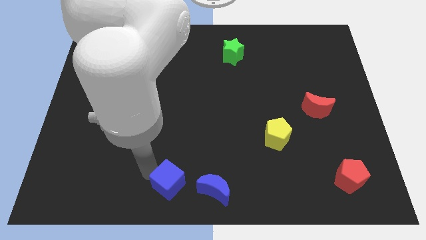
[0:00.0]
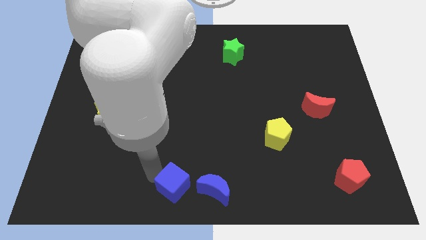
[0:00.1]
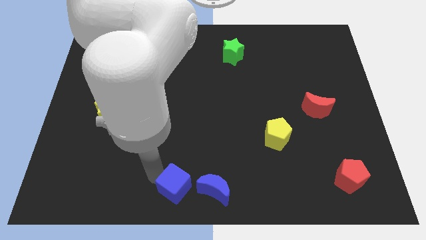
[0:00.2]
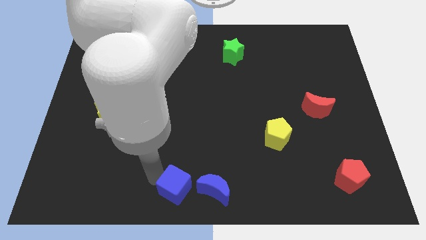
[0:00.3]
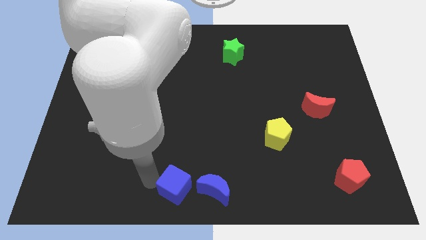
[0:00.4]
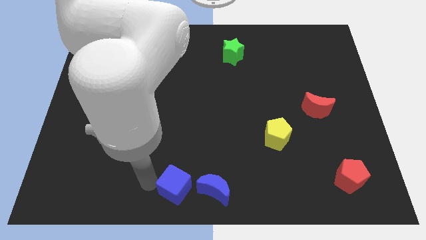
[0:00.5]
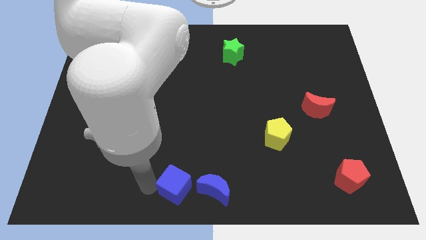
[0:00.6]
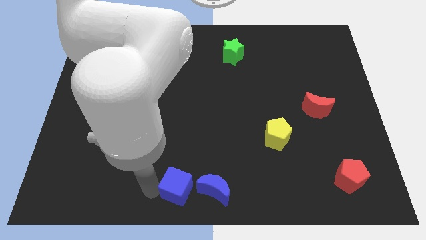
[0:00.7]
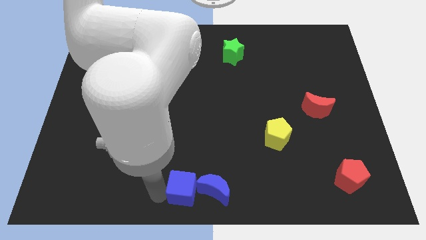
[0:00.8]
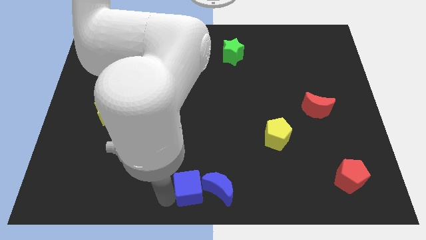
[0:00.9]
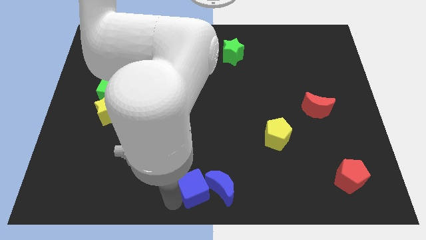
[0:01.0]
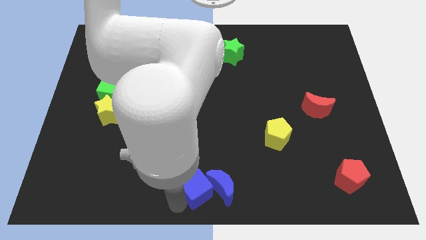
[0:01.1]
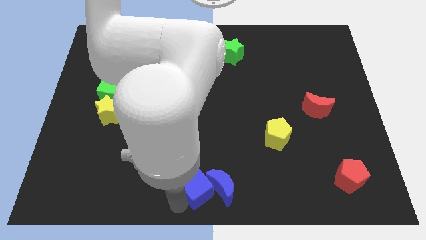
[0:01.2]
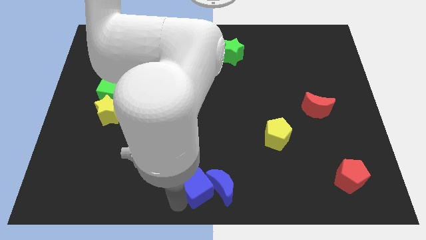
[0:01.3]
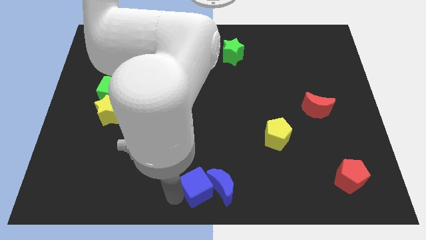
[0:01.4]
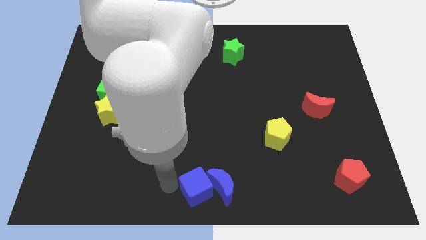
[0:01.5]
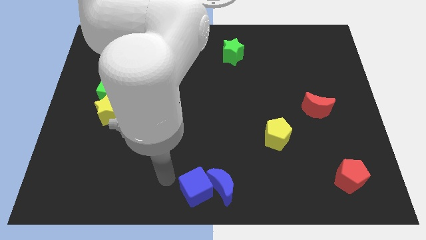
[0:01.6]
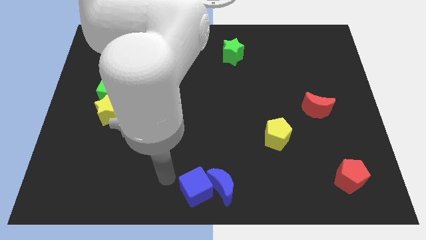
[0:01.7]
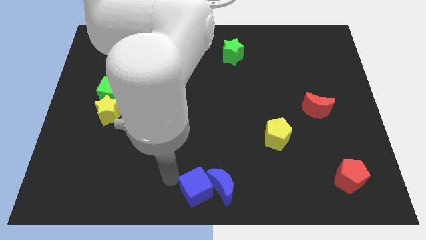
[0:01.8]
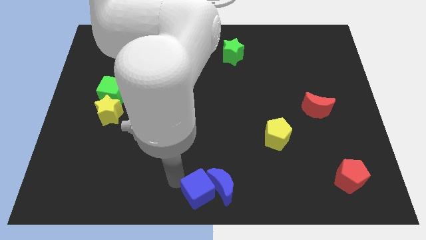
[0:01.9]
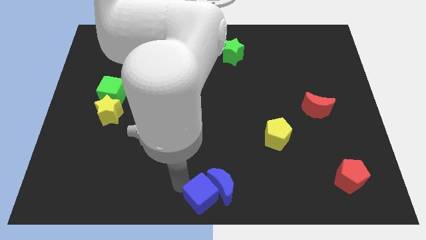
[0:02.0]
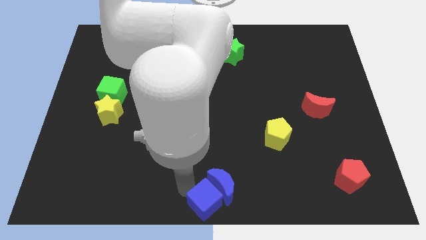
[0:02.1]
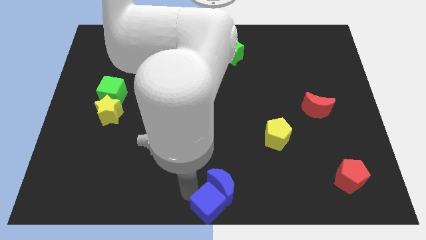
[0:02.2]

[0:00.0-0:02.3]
push the blue cube into the blue moon

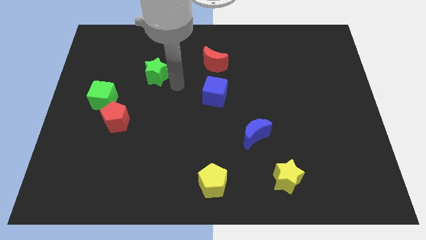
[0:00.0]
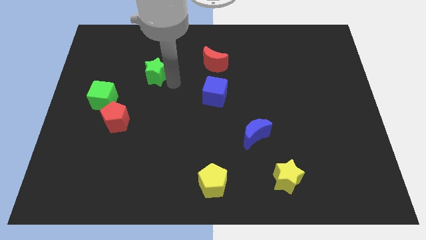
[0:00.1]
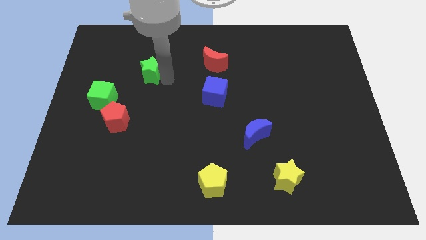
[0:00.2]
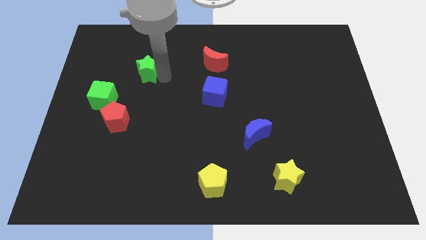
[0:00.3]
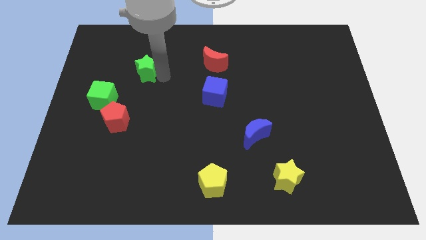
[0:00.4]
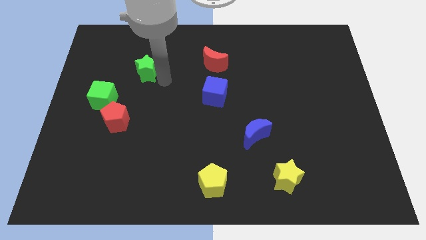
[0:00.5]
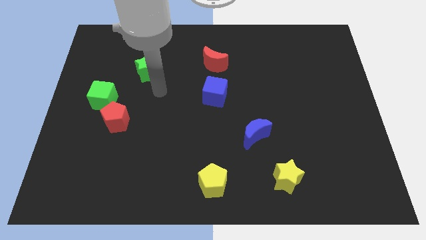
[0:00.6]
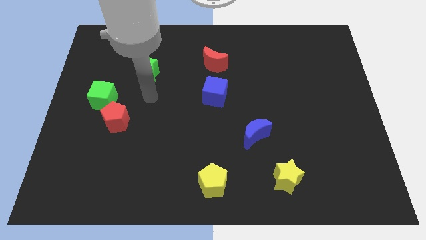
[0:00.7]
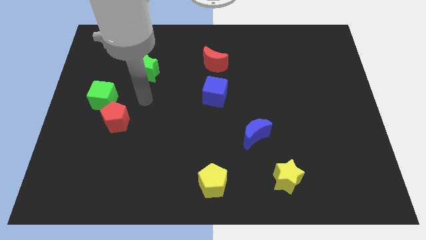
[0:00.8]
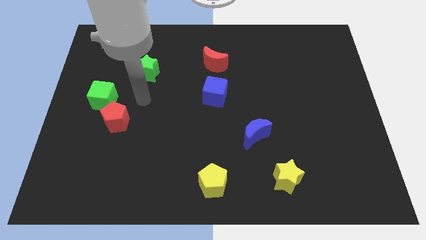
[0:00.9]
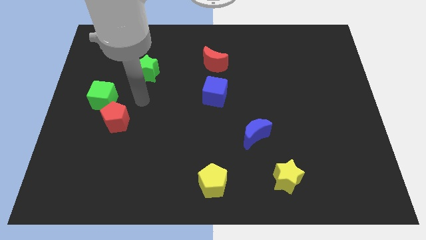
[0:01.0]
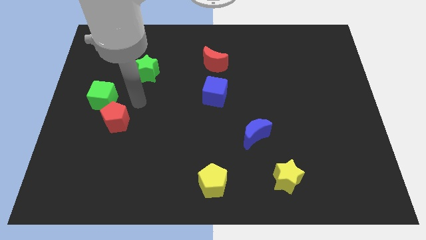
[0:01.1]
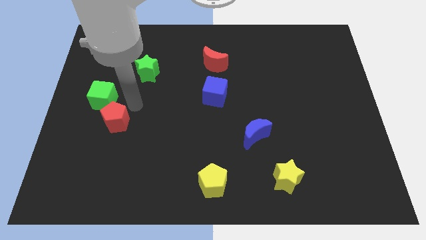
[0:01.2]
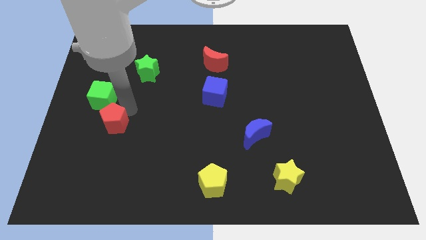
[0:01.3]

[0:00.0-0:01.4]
place your arm at the top right of the red pentagon

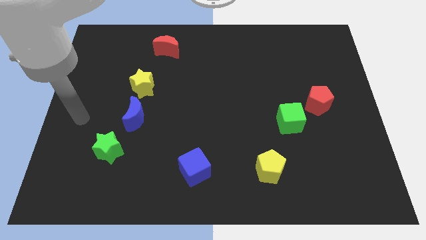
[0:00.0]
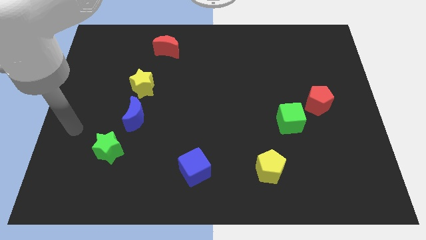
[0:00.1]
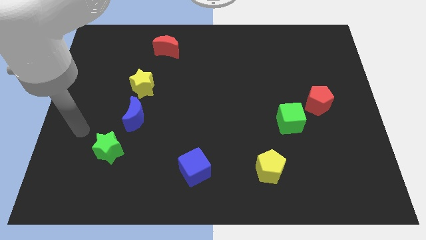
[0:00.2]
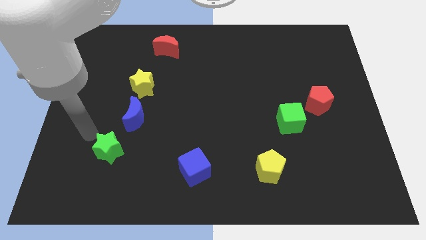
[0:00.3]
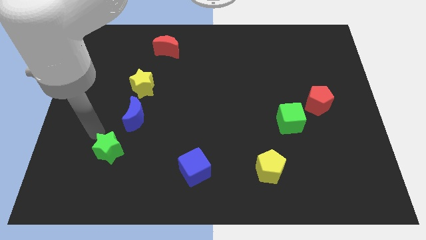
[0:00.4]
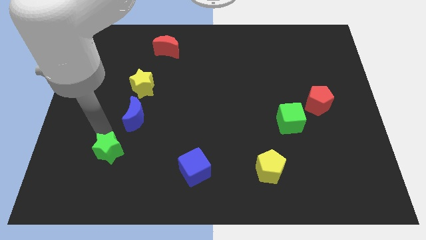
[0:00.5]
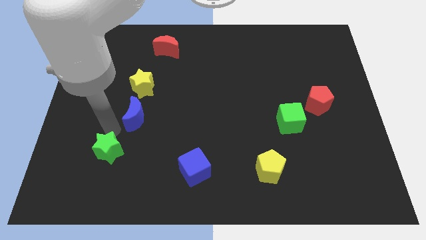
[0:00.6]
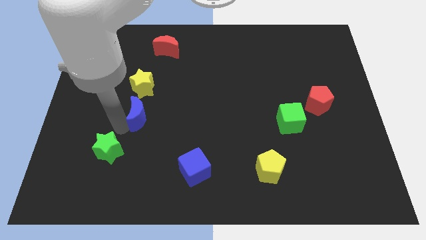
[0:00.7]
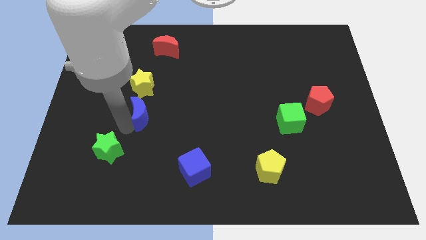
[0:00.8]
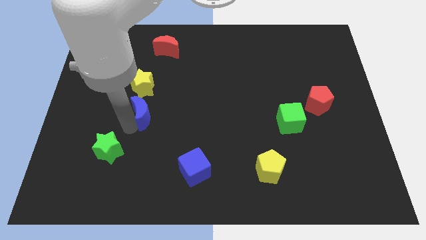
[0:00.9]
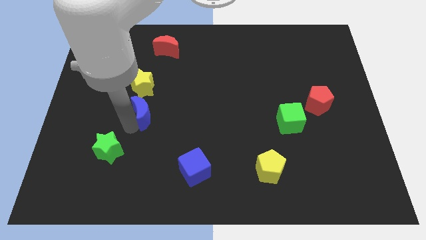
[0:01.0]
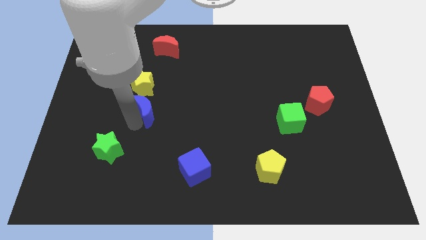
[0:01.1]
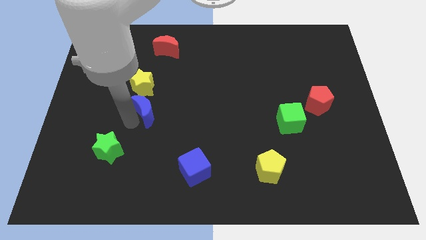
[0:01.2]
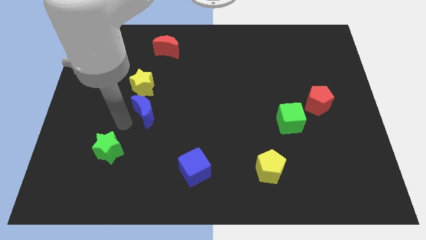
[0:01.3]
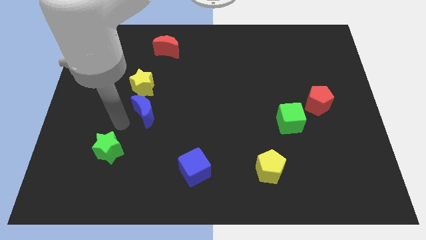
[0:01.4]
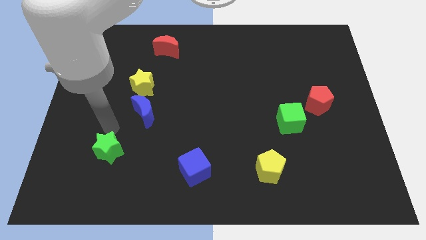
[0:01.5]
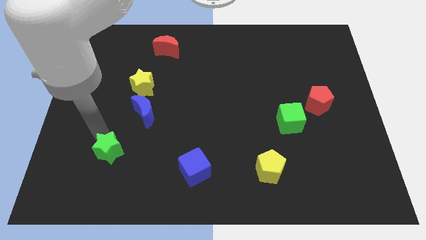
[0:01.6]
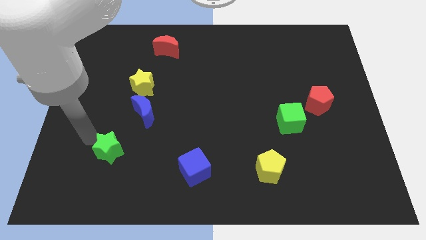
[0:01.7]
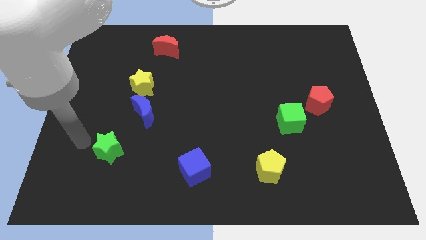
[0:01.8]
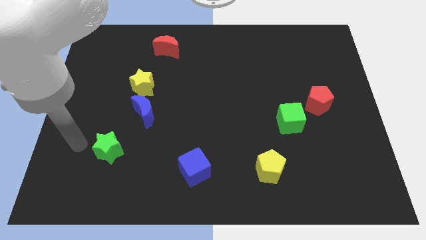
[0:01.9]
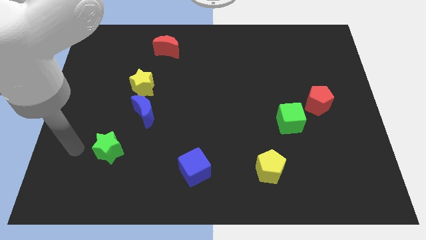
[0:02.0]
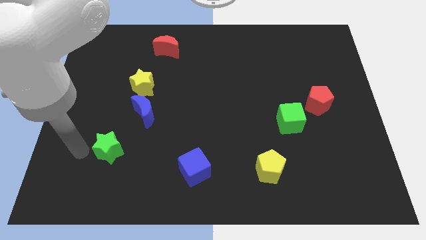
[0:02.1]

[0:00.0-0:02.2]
slightly push the blue crescent towards the yellow star

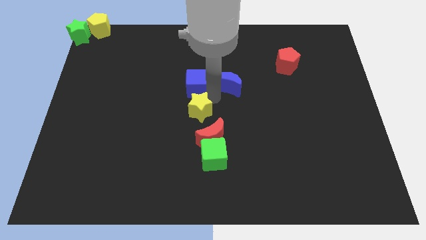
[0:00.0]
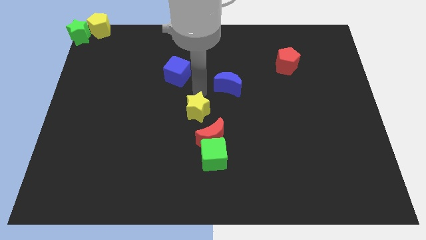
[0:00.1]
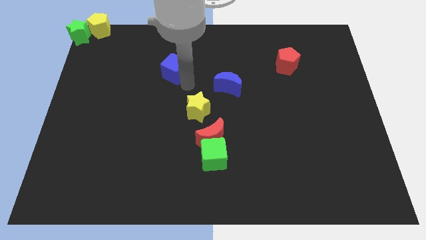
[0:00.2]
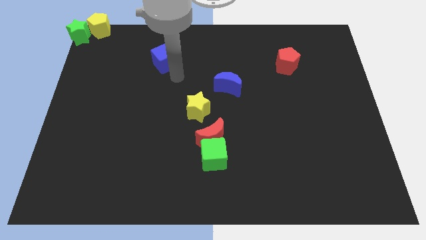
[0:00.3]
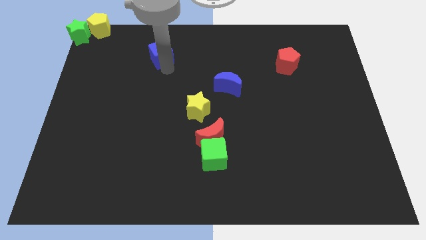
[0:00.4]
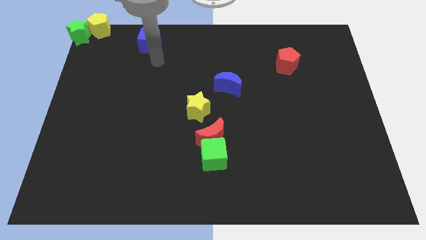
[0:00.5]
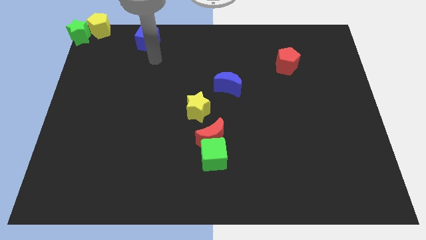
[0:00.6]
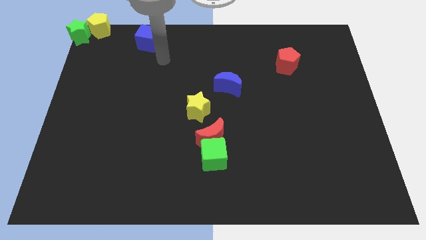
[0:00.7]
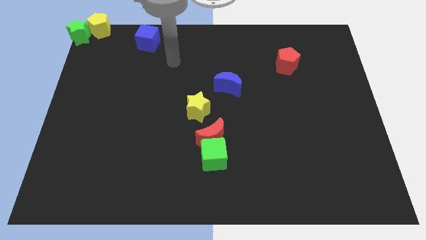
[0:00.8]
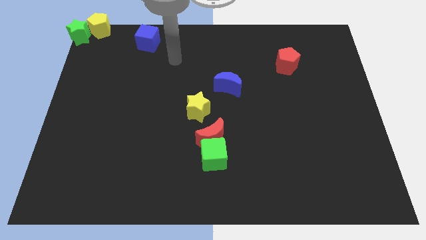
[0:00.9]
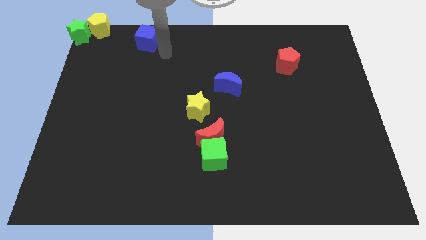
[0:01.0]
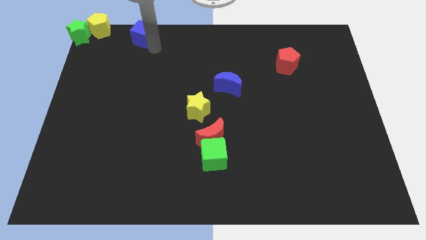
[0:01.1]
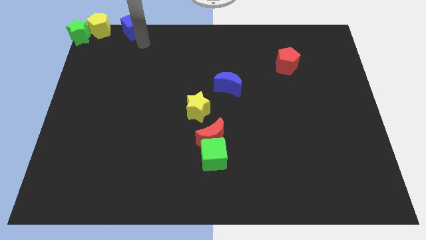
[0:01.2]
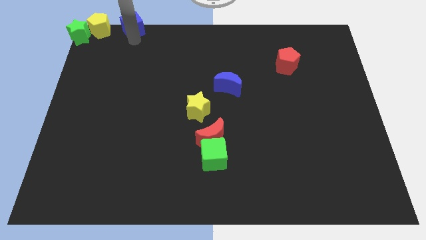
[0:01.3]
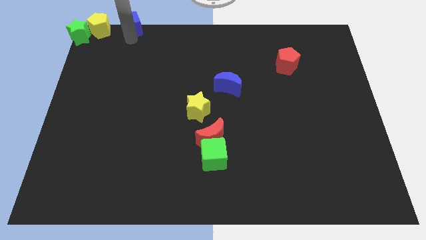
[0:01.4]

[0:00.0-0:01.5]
push the blue cube to the right of the yellow pentagon

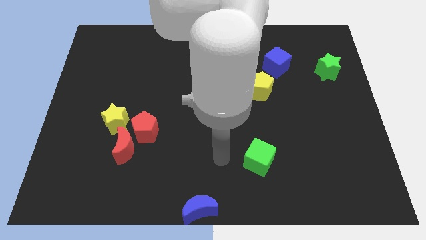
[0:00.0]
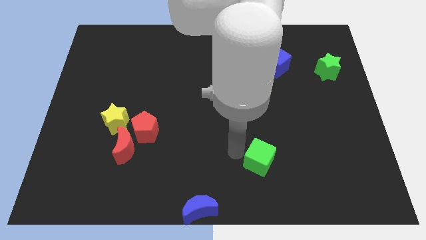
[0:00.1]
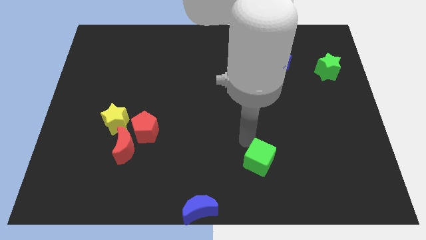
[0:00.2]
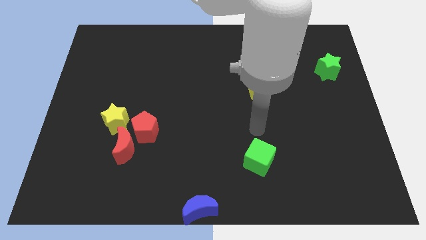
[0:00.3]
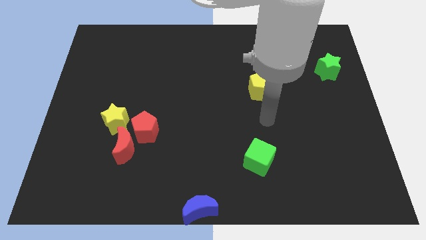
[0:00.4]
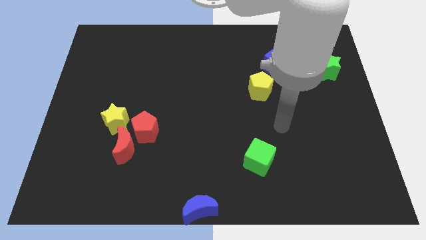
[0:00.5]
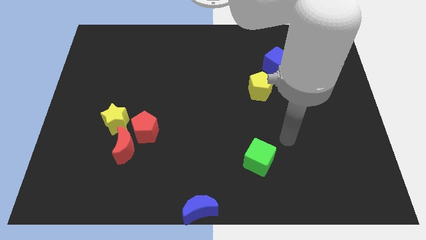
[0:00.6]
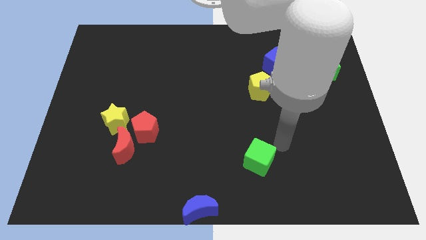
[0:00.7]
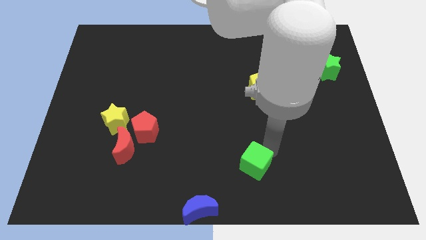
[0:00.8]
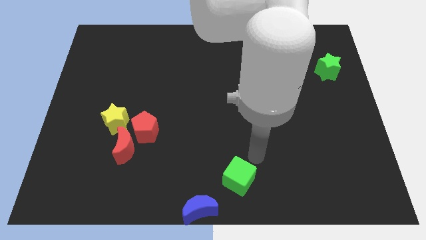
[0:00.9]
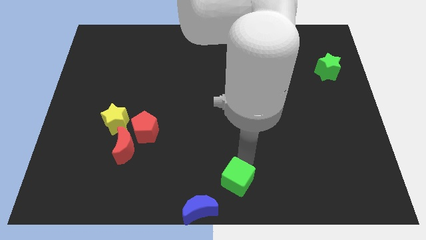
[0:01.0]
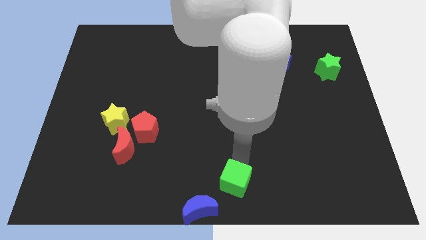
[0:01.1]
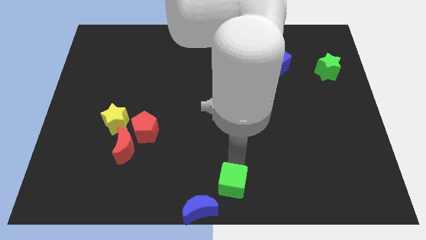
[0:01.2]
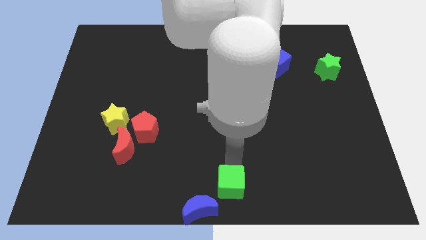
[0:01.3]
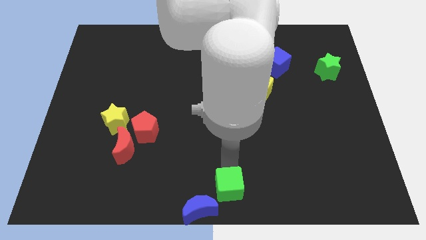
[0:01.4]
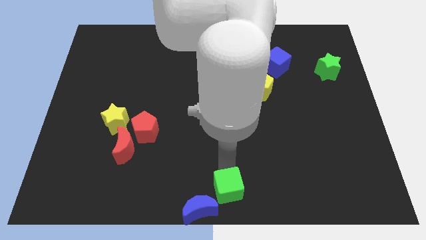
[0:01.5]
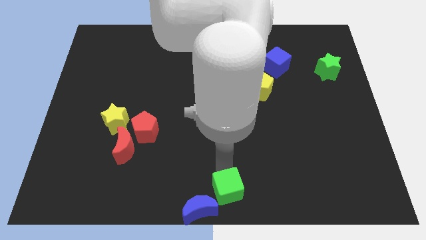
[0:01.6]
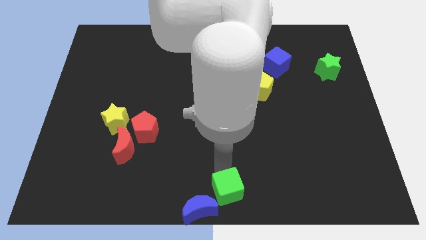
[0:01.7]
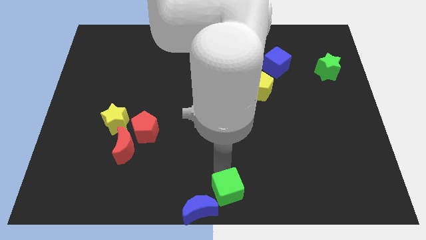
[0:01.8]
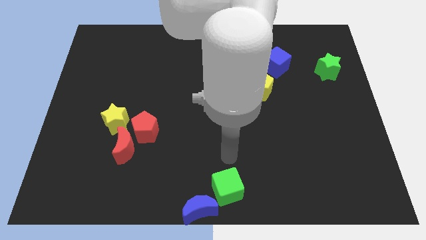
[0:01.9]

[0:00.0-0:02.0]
push the green cube to the top right side of the blue moon
